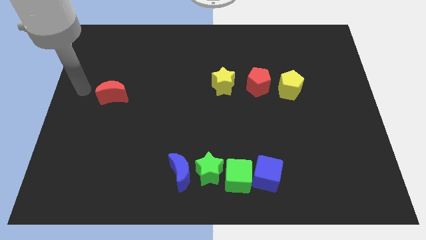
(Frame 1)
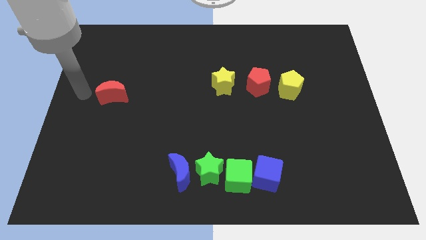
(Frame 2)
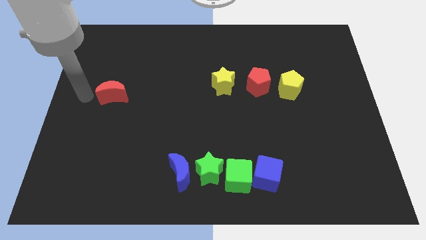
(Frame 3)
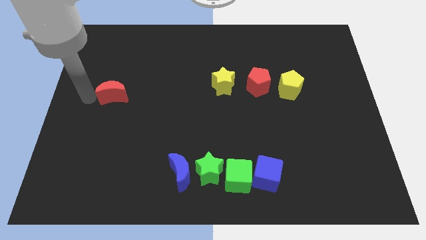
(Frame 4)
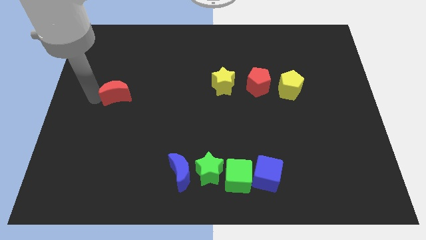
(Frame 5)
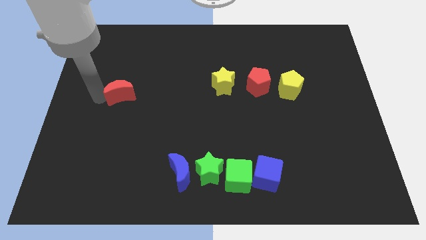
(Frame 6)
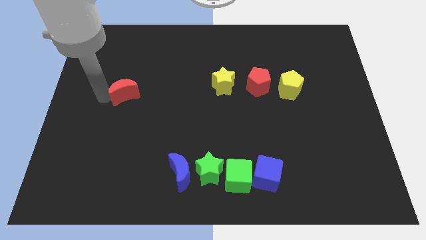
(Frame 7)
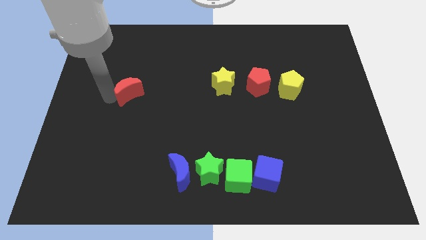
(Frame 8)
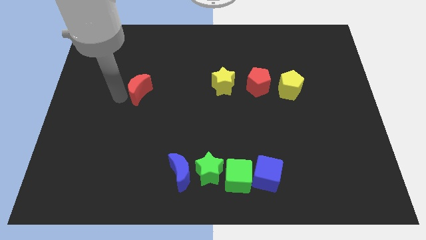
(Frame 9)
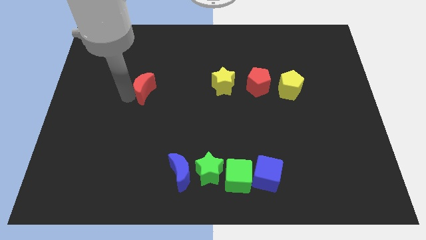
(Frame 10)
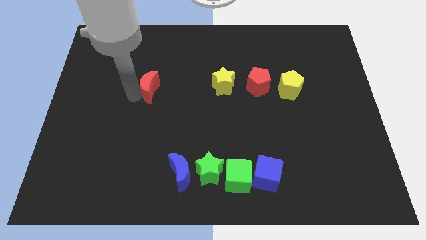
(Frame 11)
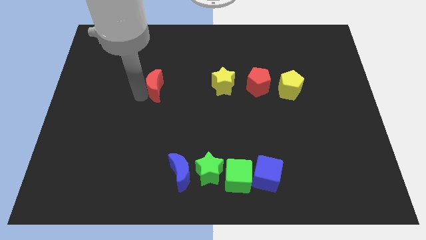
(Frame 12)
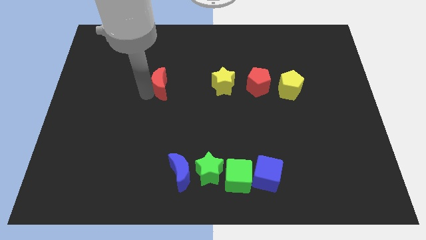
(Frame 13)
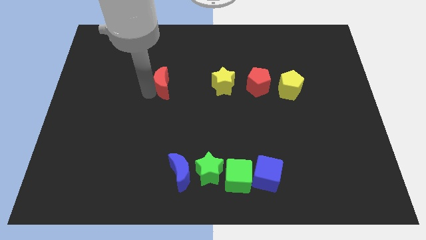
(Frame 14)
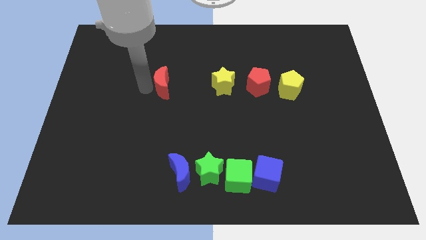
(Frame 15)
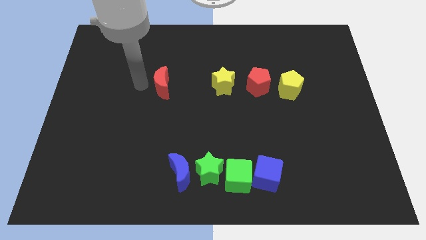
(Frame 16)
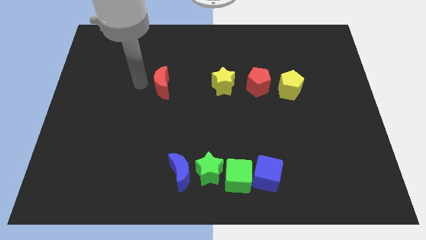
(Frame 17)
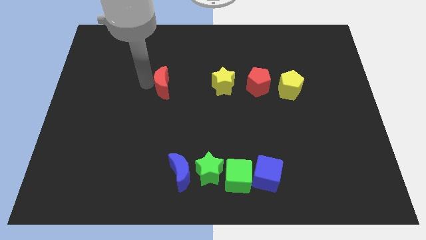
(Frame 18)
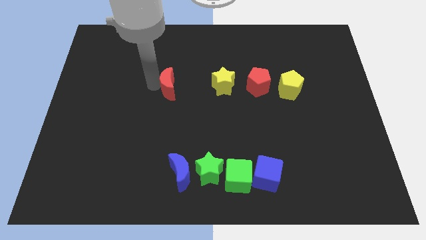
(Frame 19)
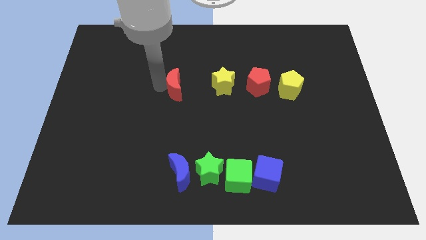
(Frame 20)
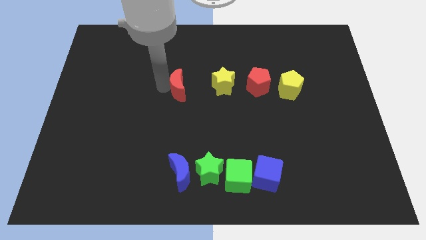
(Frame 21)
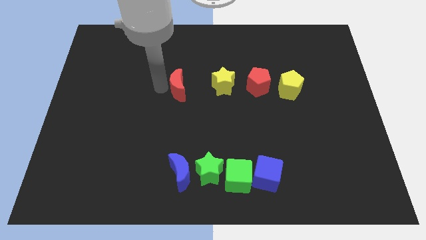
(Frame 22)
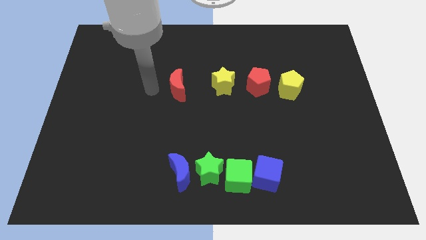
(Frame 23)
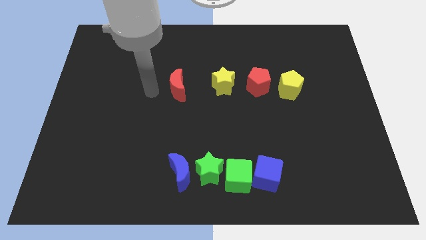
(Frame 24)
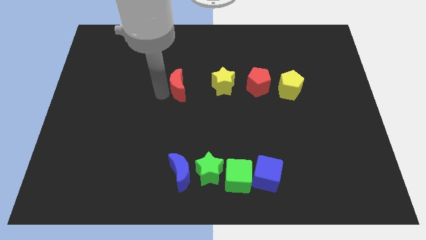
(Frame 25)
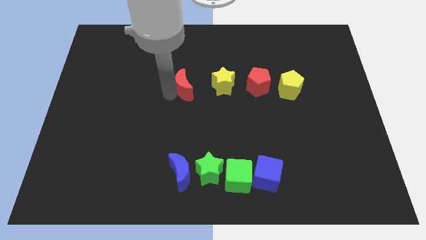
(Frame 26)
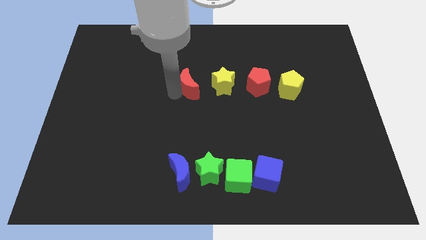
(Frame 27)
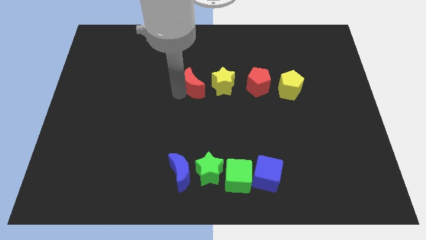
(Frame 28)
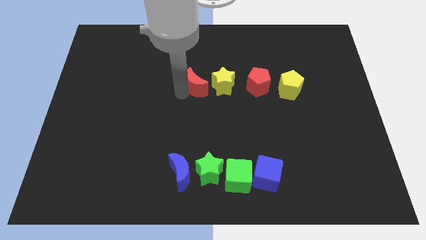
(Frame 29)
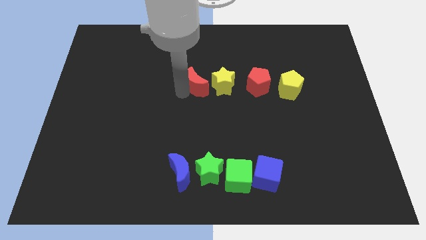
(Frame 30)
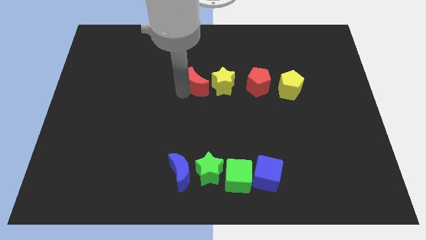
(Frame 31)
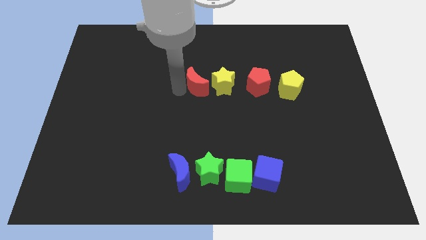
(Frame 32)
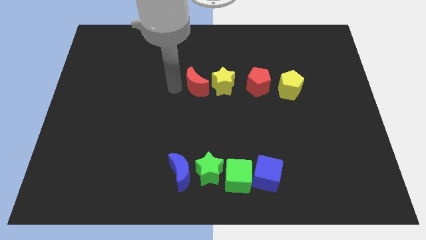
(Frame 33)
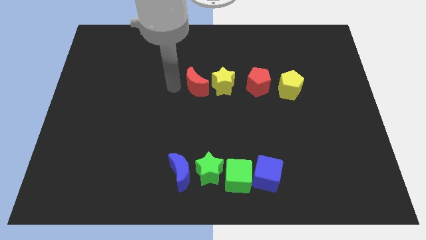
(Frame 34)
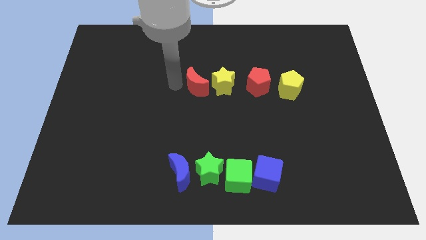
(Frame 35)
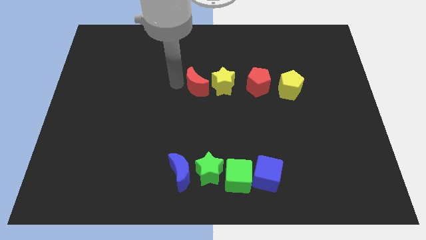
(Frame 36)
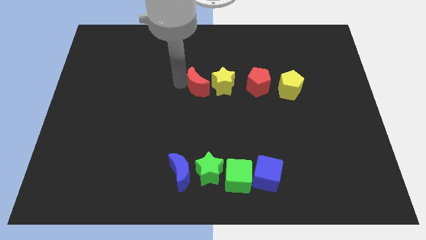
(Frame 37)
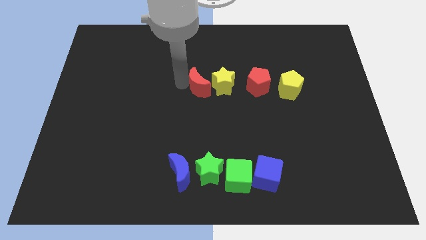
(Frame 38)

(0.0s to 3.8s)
move the red crescent in a line with red and yellow blocks

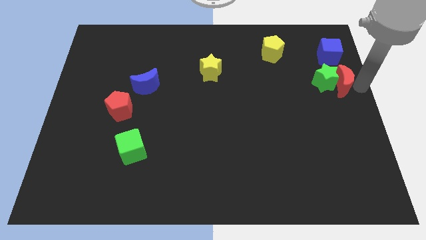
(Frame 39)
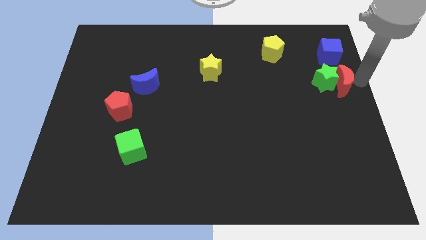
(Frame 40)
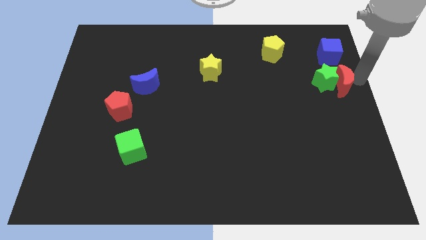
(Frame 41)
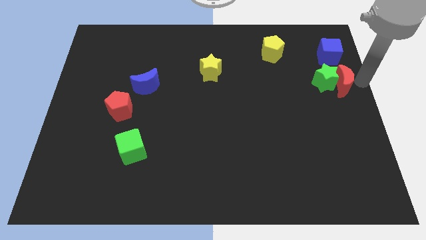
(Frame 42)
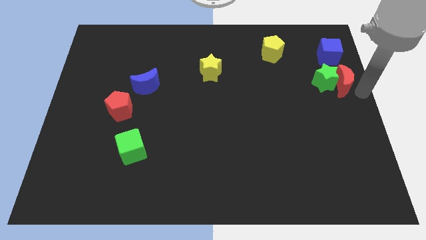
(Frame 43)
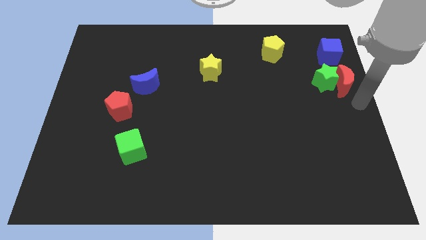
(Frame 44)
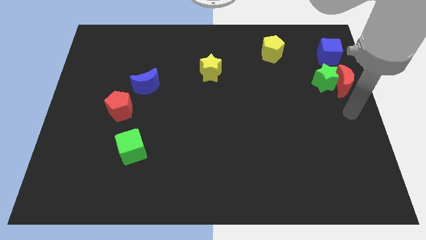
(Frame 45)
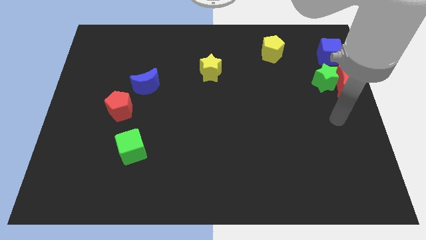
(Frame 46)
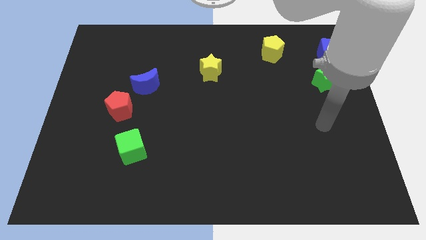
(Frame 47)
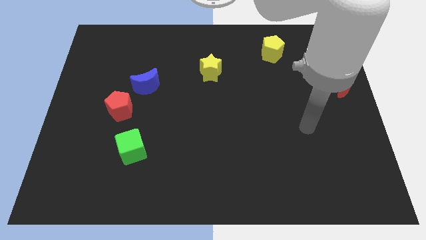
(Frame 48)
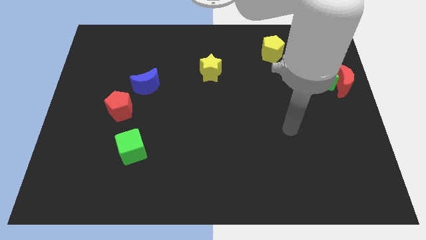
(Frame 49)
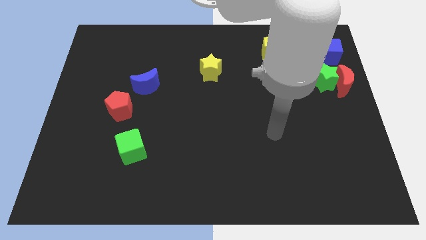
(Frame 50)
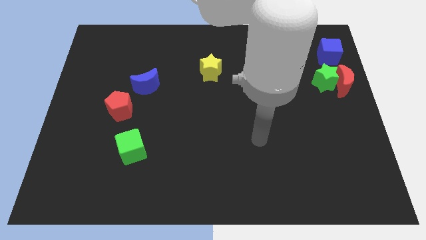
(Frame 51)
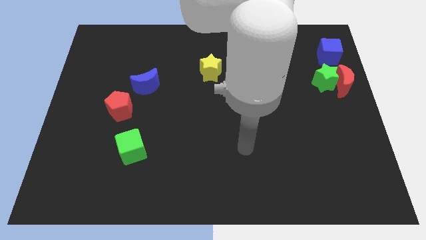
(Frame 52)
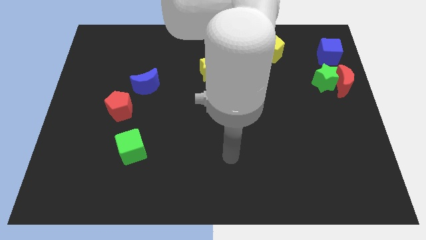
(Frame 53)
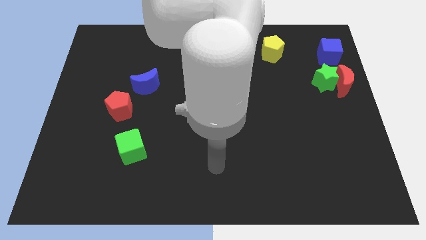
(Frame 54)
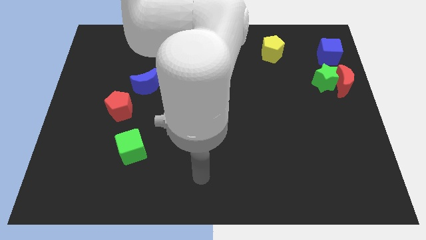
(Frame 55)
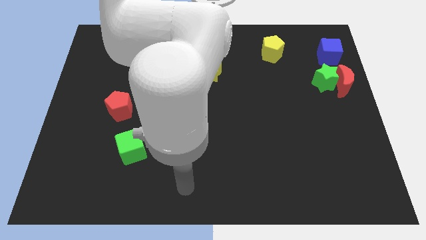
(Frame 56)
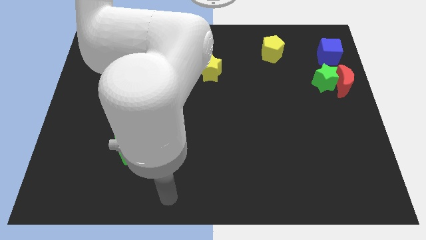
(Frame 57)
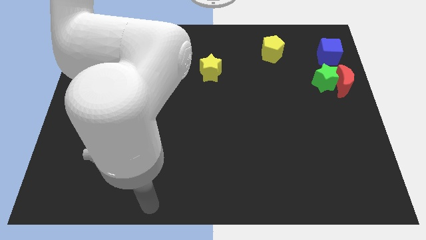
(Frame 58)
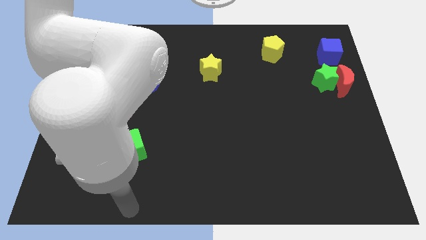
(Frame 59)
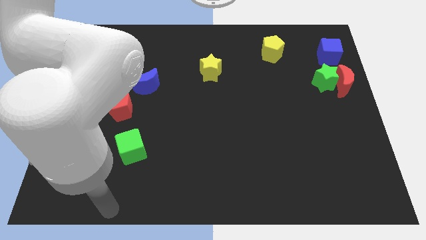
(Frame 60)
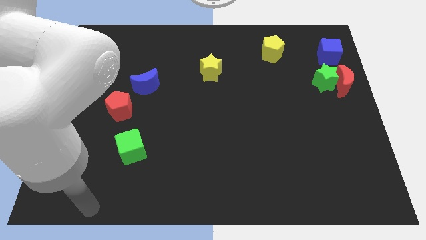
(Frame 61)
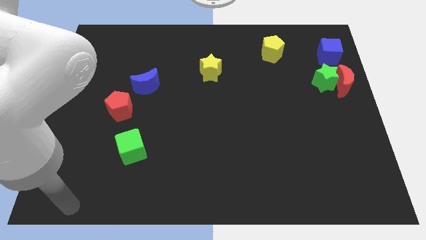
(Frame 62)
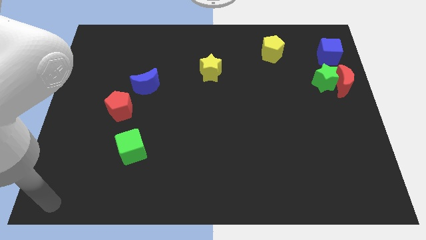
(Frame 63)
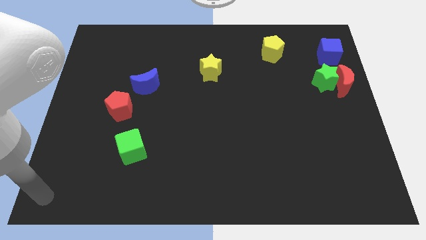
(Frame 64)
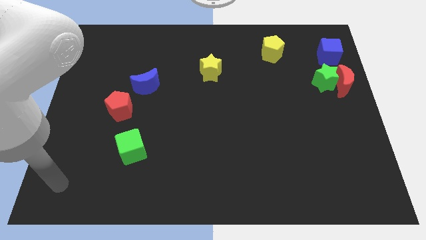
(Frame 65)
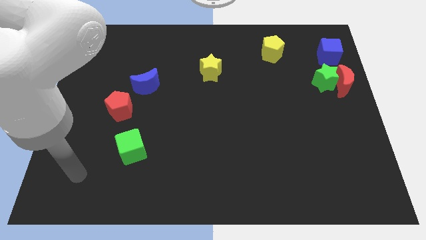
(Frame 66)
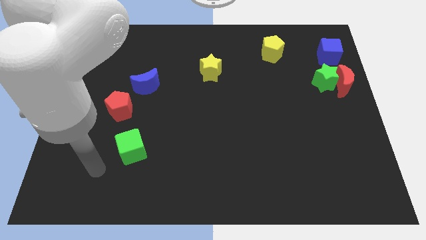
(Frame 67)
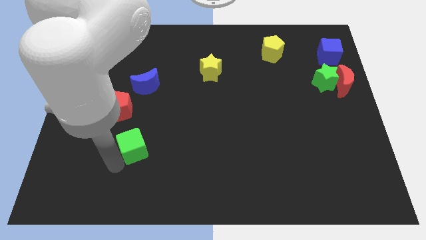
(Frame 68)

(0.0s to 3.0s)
move your arm away from the red moon

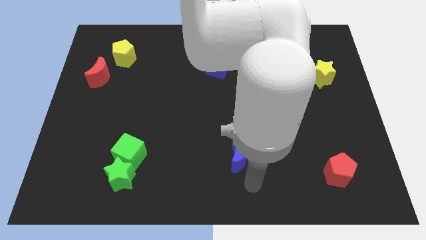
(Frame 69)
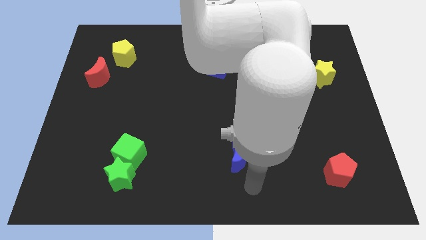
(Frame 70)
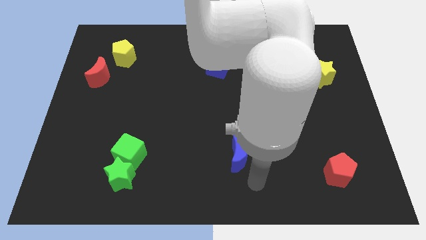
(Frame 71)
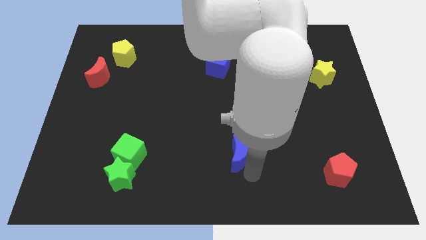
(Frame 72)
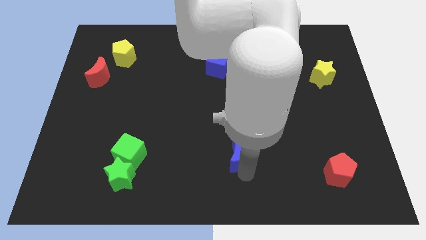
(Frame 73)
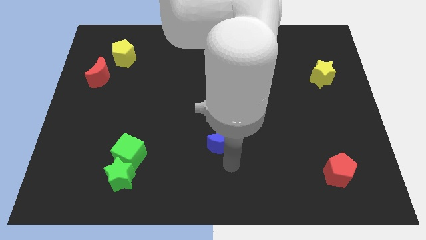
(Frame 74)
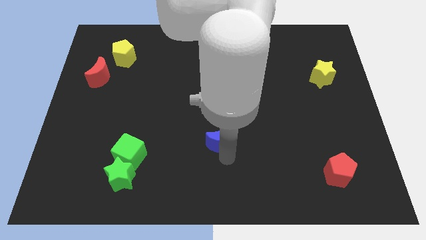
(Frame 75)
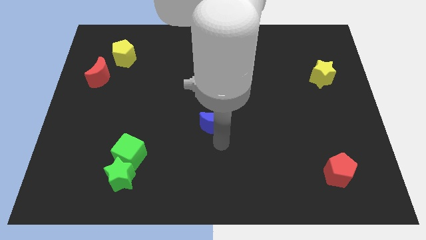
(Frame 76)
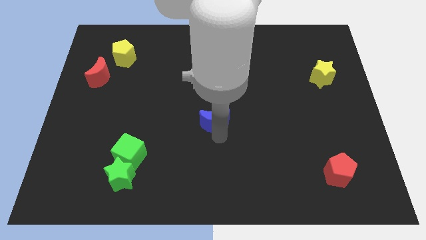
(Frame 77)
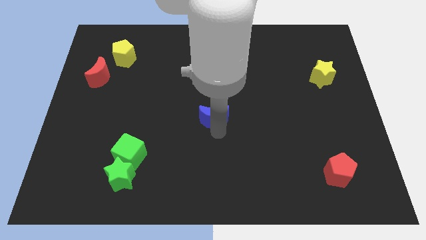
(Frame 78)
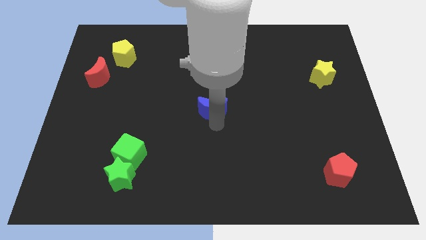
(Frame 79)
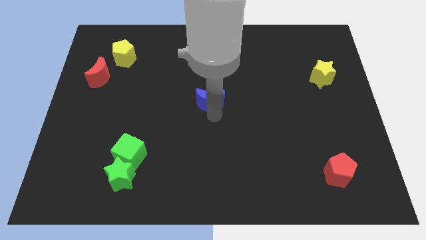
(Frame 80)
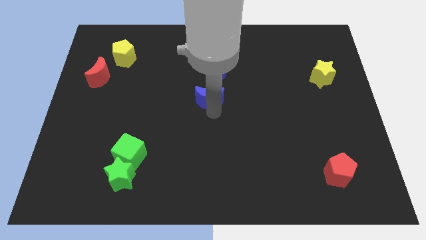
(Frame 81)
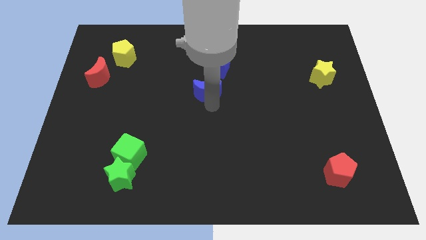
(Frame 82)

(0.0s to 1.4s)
put the blue moon at the center of the board

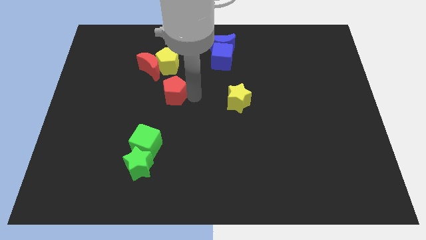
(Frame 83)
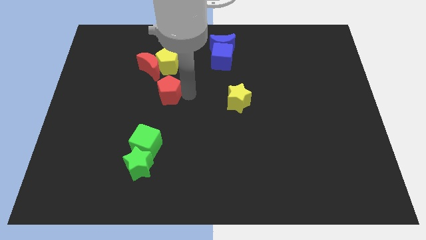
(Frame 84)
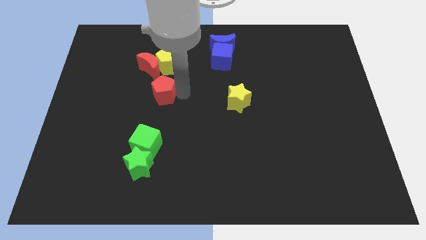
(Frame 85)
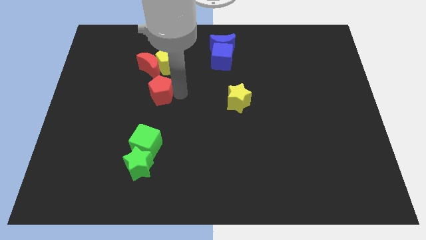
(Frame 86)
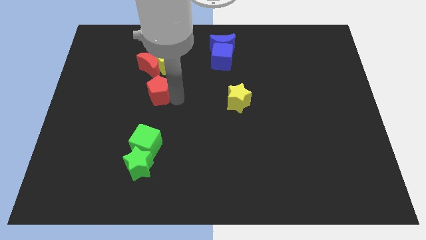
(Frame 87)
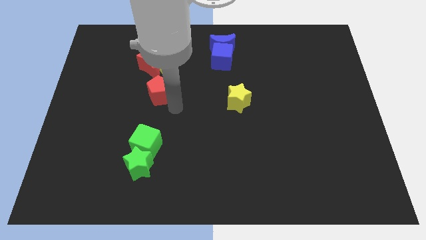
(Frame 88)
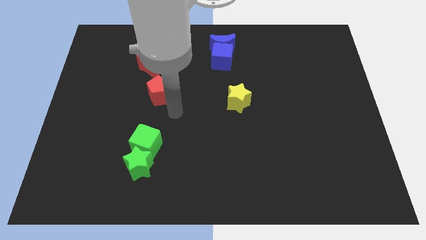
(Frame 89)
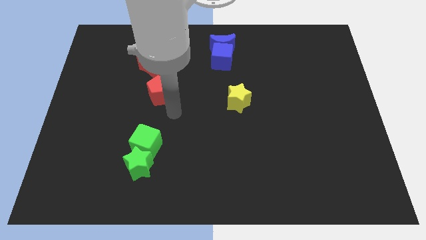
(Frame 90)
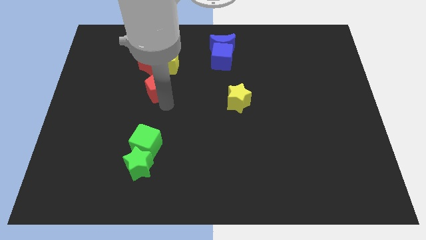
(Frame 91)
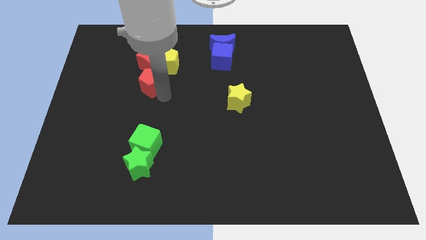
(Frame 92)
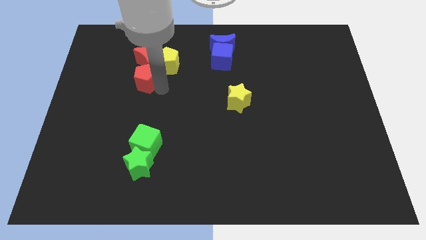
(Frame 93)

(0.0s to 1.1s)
push the red pentagon under the red crescent
